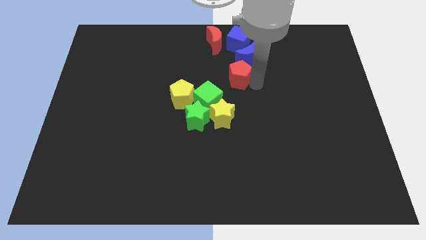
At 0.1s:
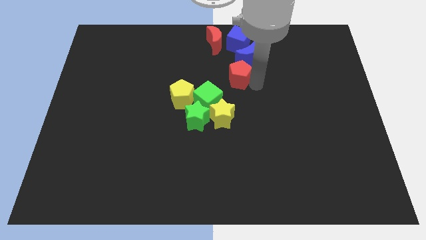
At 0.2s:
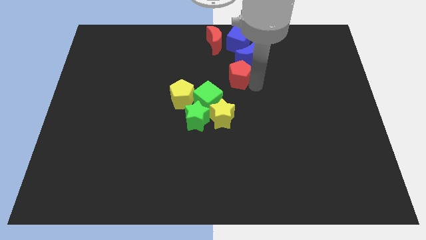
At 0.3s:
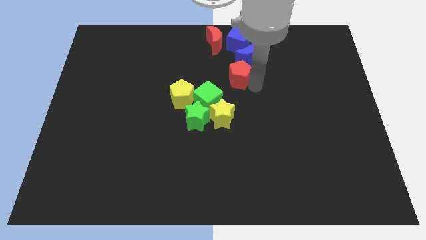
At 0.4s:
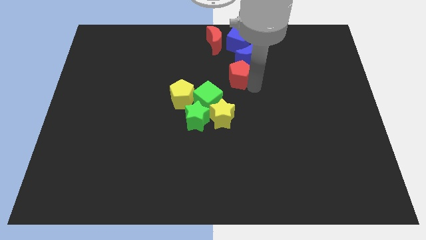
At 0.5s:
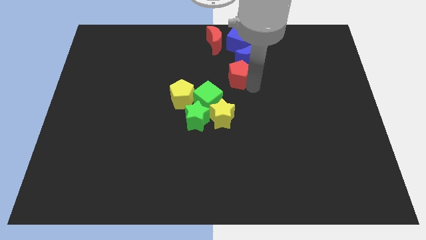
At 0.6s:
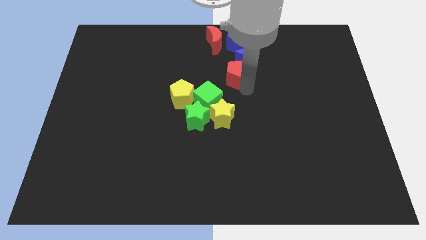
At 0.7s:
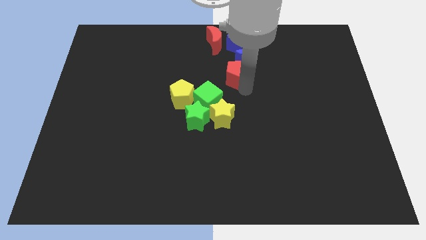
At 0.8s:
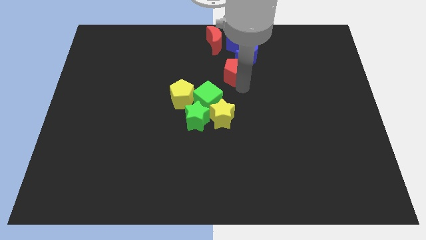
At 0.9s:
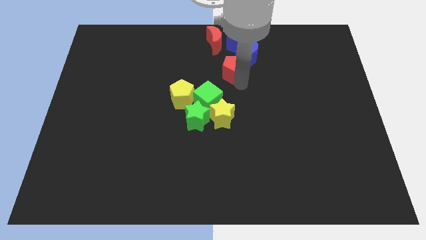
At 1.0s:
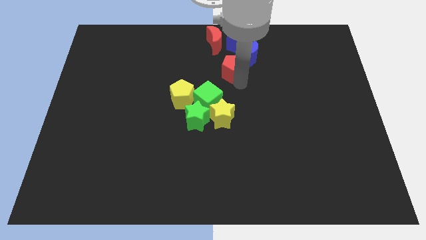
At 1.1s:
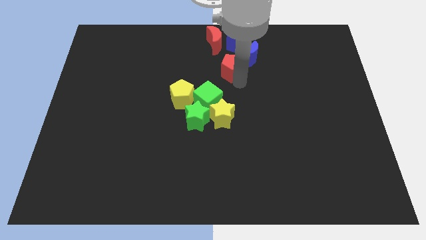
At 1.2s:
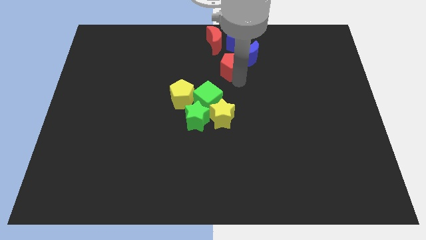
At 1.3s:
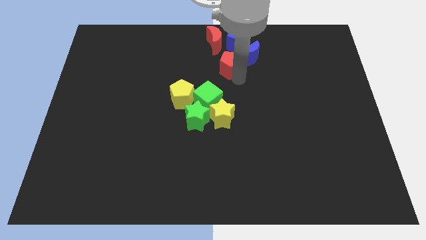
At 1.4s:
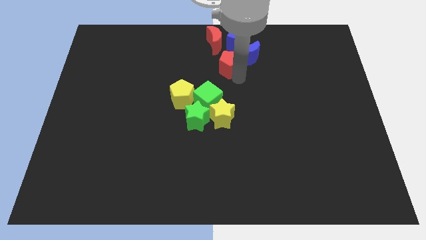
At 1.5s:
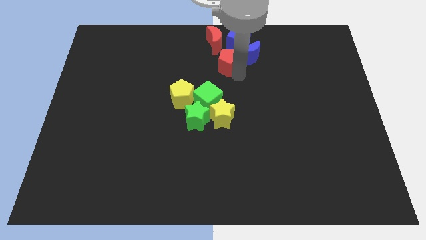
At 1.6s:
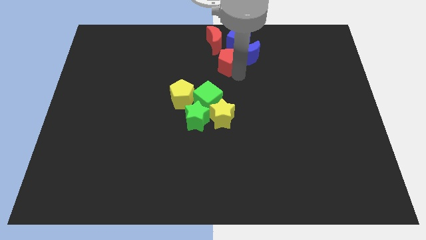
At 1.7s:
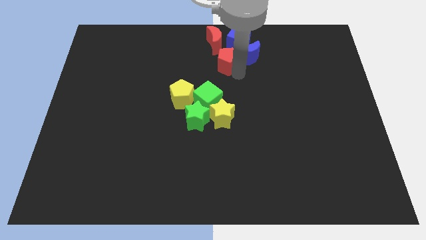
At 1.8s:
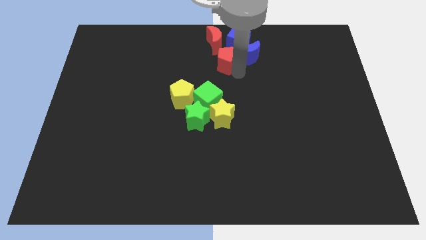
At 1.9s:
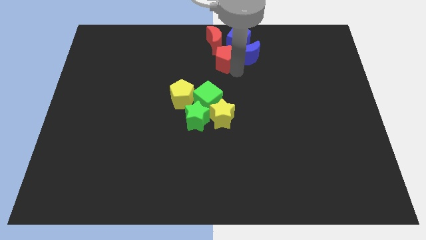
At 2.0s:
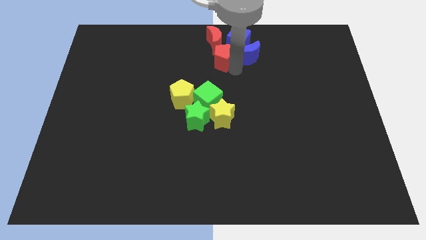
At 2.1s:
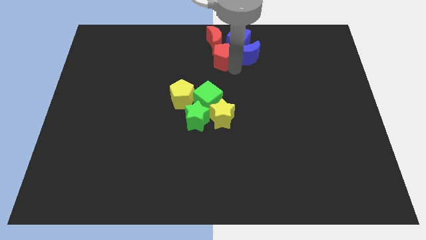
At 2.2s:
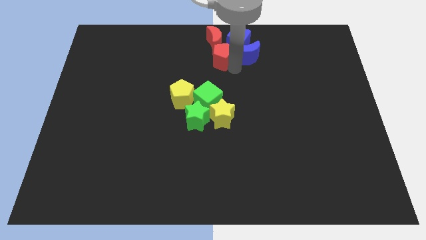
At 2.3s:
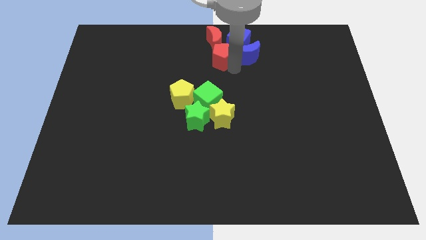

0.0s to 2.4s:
move the red pentagon into the group of objects

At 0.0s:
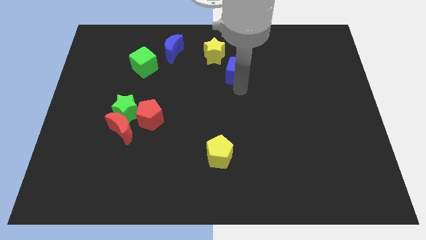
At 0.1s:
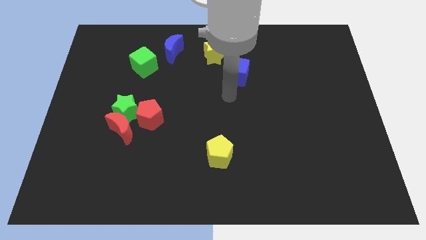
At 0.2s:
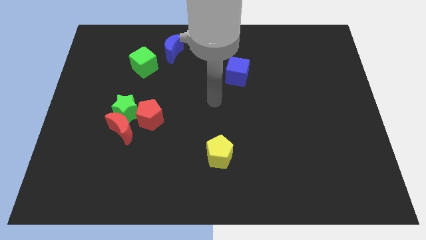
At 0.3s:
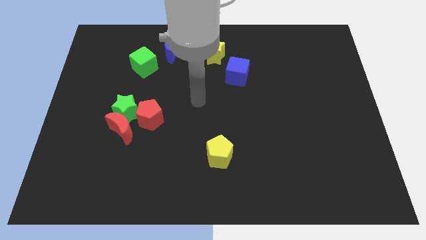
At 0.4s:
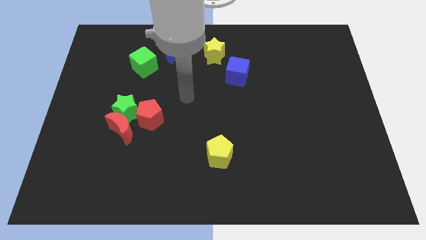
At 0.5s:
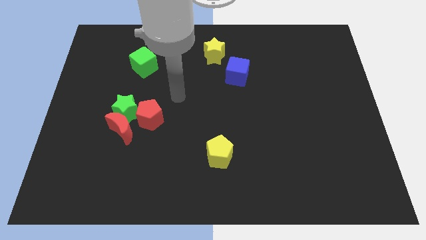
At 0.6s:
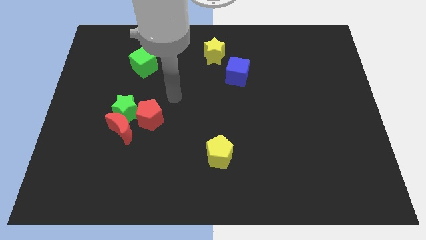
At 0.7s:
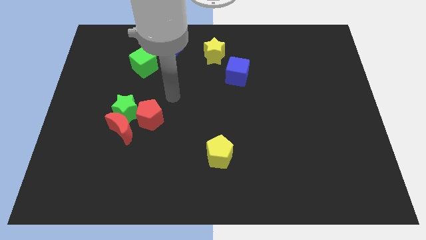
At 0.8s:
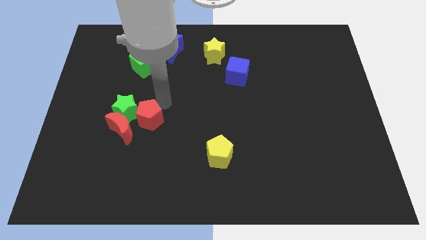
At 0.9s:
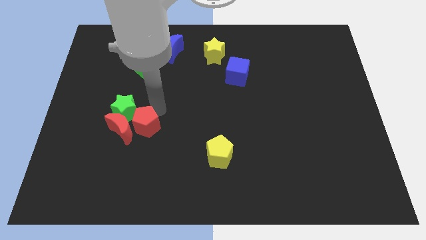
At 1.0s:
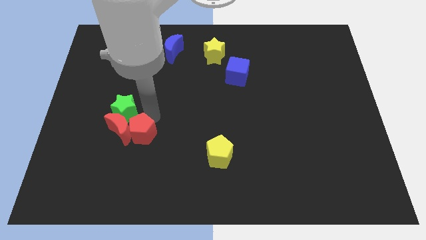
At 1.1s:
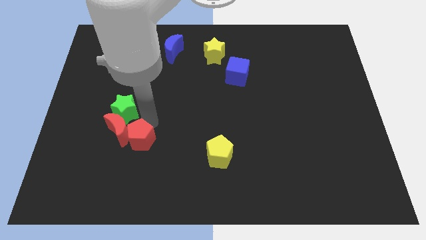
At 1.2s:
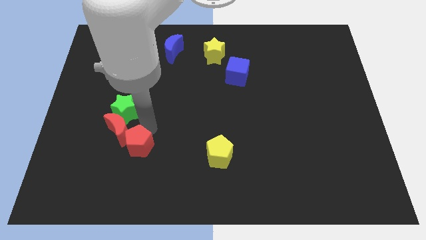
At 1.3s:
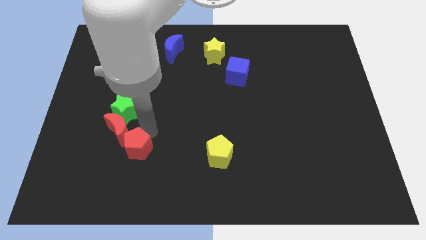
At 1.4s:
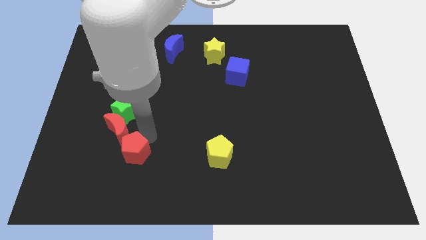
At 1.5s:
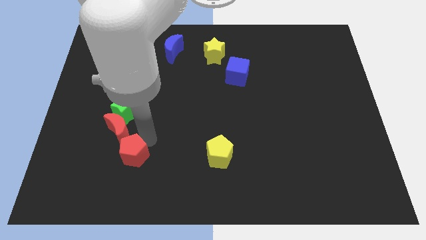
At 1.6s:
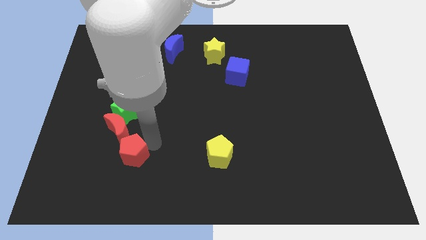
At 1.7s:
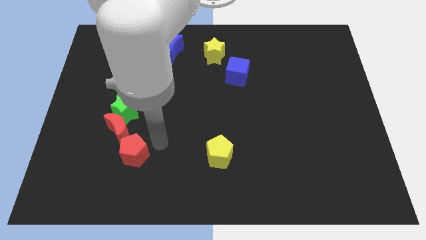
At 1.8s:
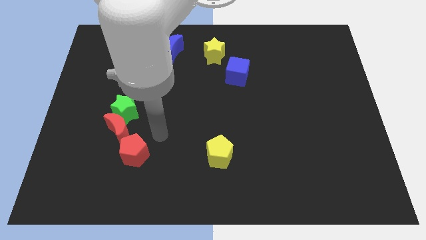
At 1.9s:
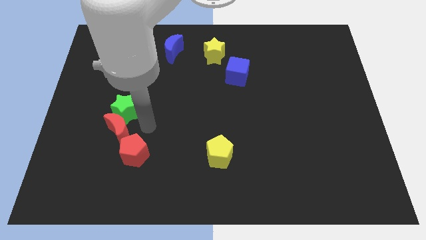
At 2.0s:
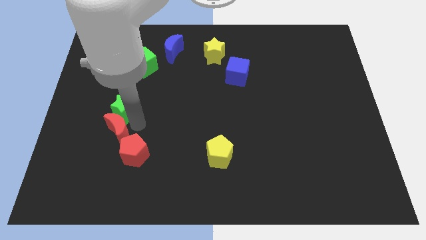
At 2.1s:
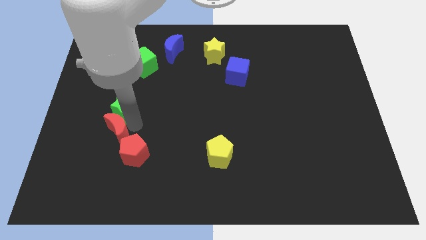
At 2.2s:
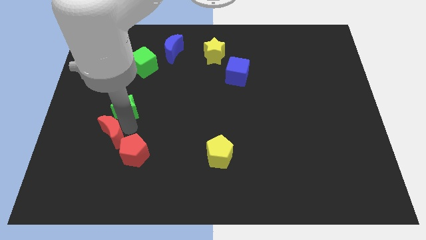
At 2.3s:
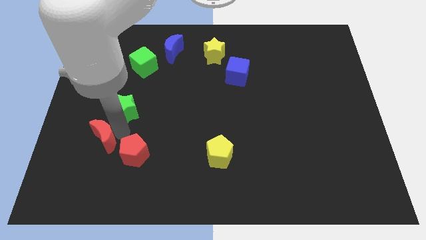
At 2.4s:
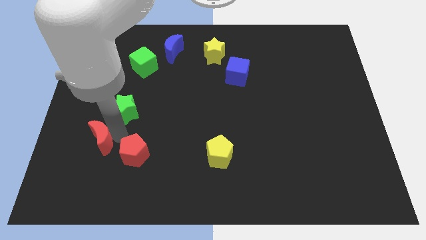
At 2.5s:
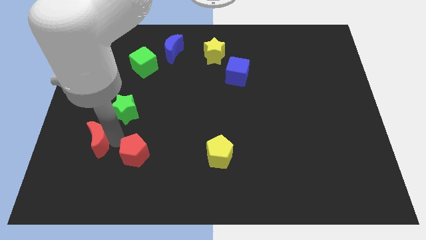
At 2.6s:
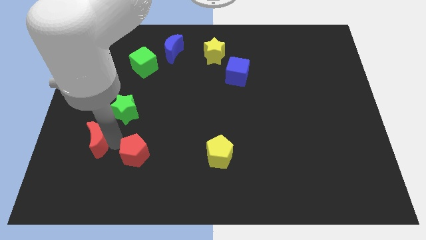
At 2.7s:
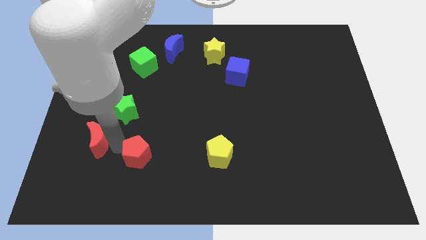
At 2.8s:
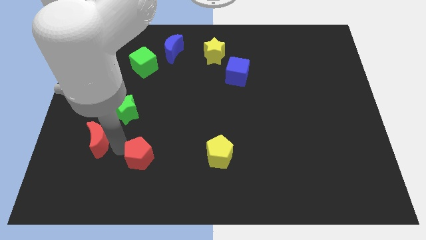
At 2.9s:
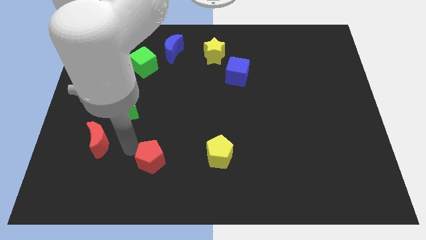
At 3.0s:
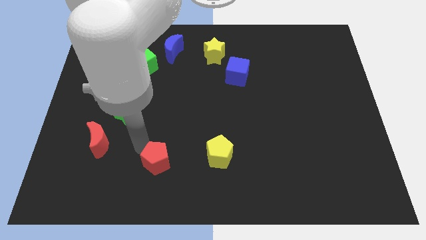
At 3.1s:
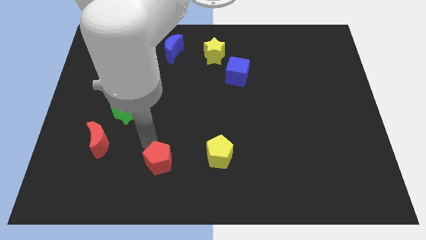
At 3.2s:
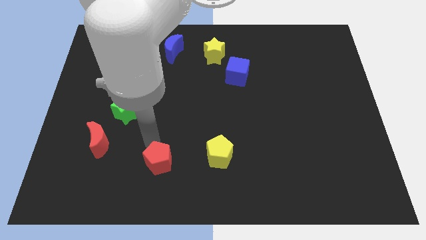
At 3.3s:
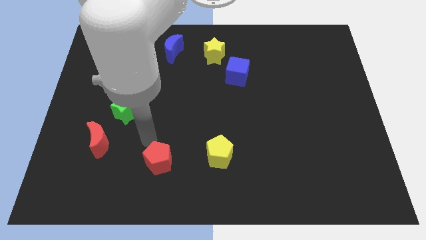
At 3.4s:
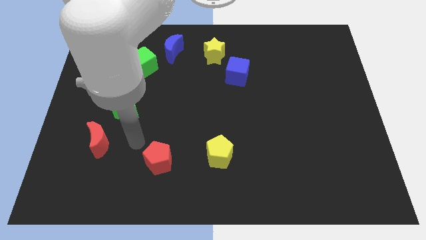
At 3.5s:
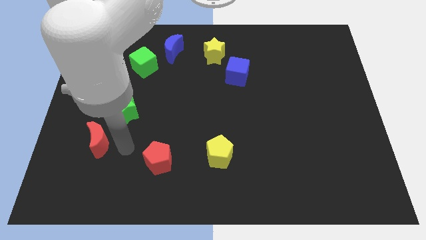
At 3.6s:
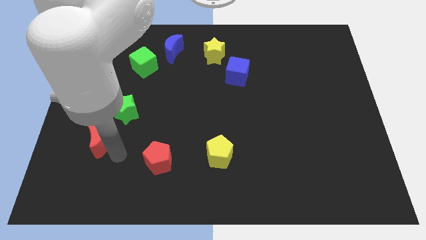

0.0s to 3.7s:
separate the red moon and red pentagon

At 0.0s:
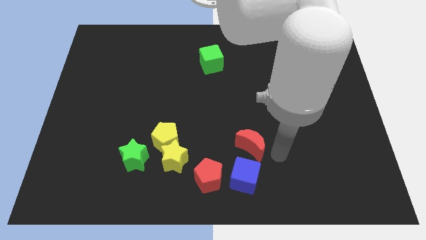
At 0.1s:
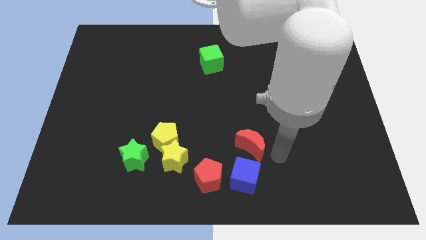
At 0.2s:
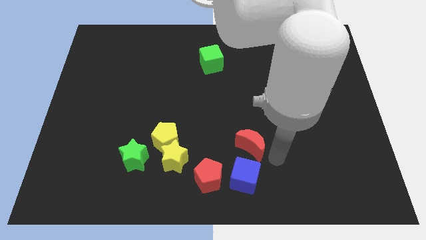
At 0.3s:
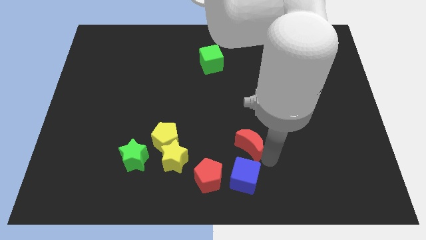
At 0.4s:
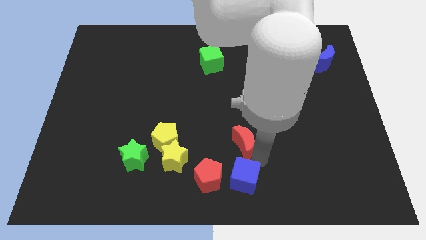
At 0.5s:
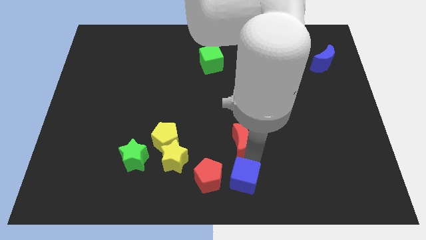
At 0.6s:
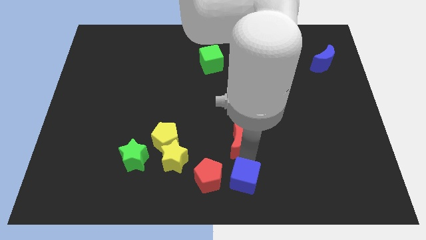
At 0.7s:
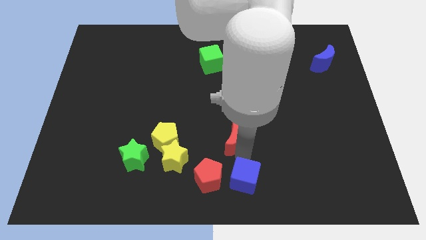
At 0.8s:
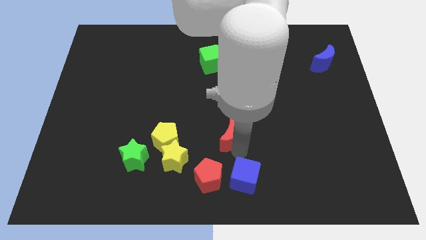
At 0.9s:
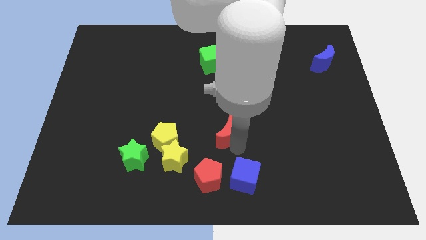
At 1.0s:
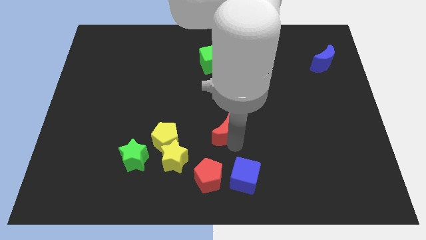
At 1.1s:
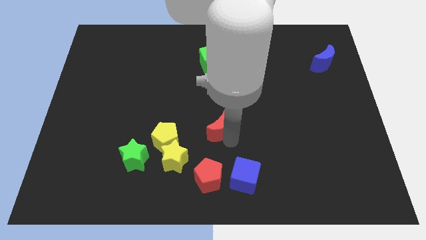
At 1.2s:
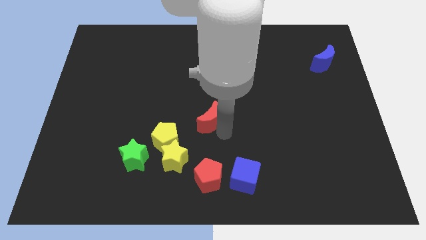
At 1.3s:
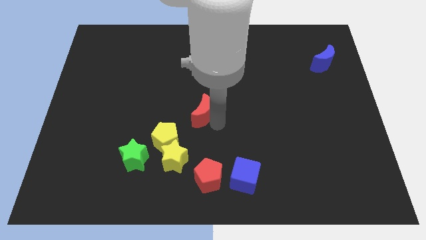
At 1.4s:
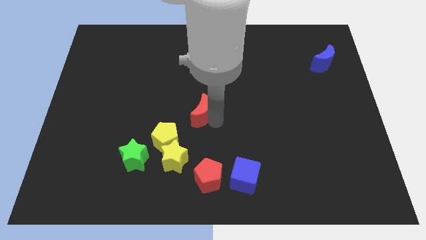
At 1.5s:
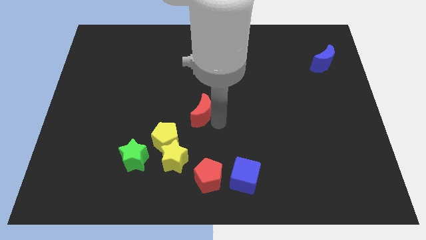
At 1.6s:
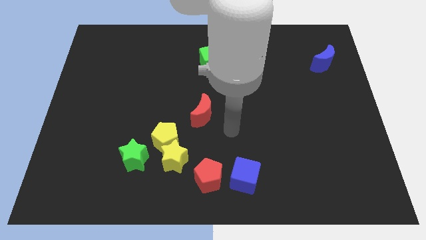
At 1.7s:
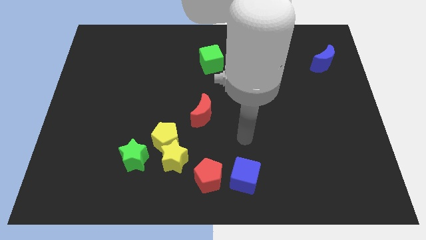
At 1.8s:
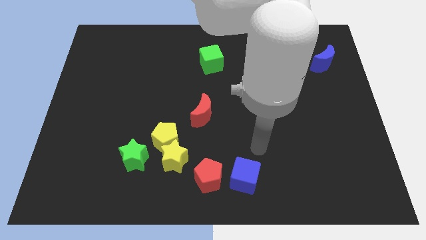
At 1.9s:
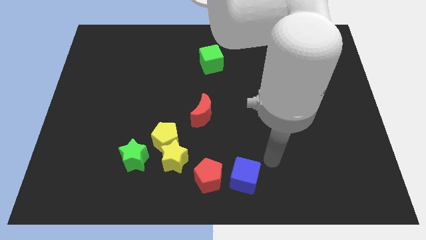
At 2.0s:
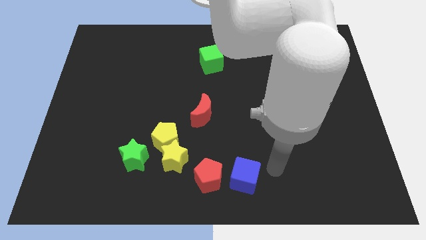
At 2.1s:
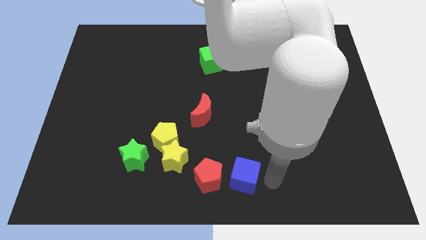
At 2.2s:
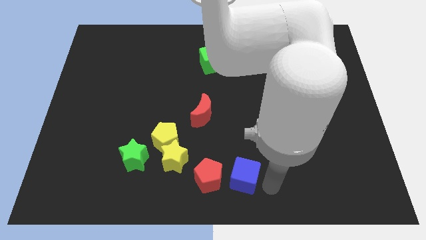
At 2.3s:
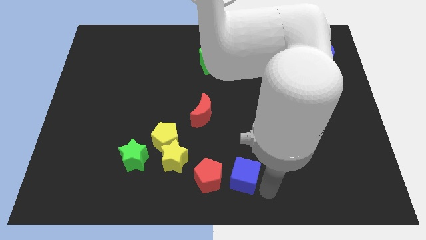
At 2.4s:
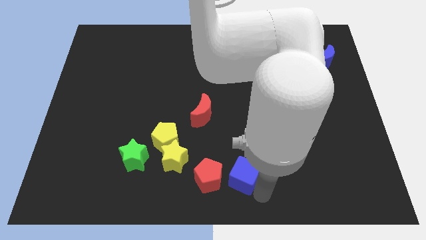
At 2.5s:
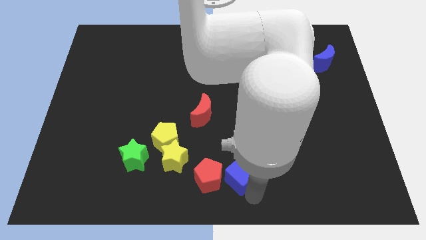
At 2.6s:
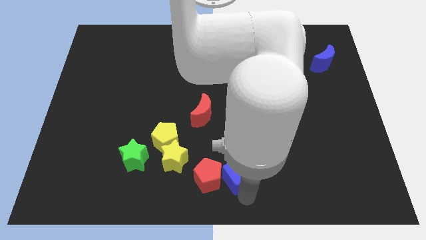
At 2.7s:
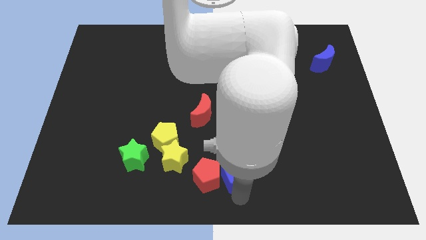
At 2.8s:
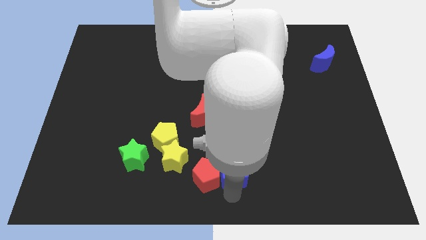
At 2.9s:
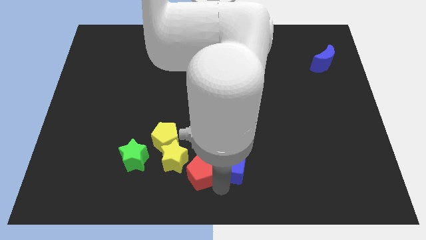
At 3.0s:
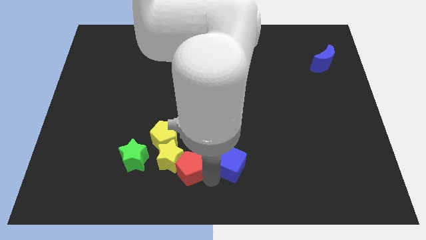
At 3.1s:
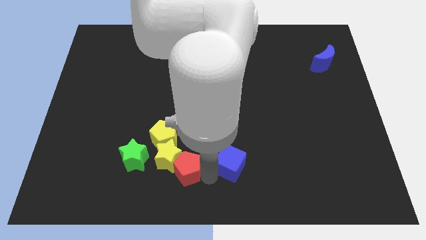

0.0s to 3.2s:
place your arm in between red pentagon and blue cube
